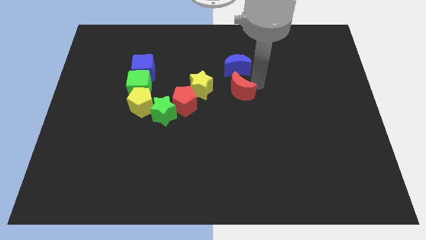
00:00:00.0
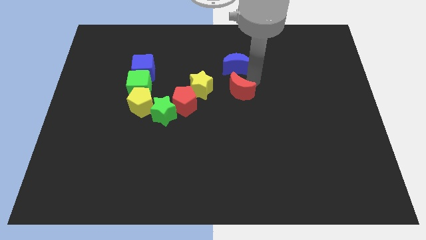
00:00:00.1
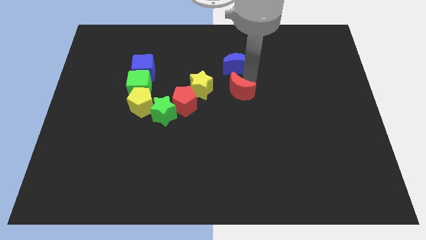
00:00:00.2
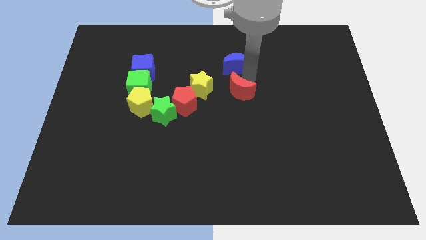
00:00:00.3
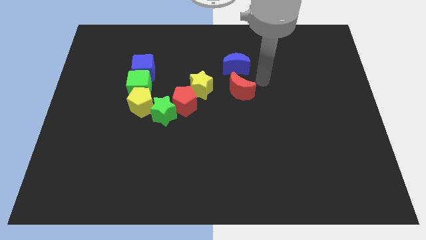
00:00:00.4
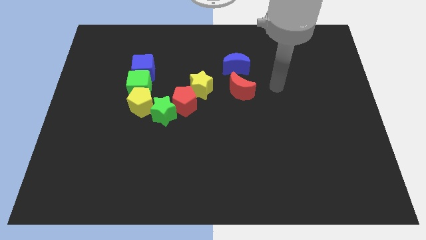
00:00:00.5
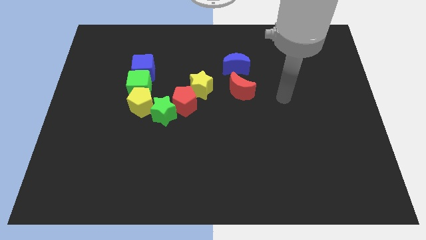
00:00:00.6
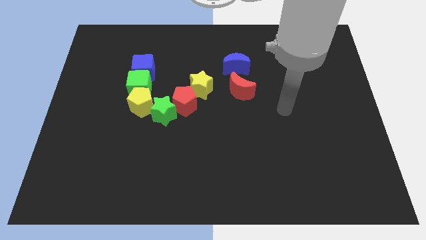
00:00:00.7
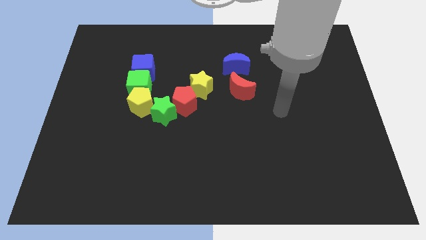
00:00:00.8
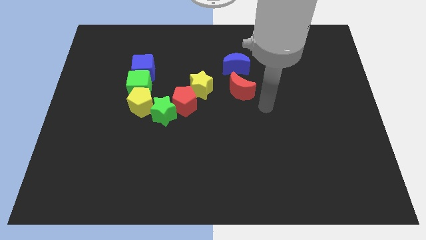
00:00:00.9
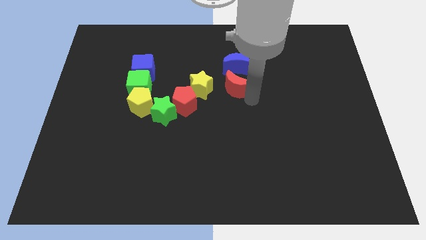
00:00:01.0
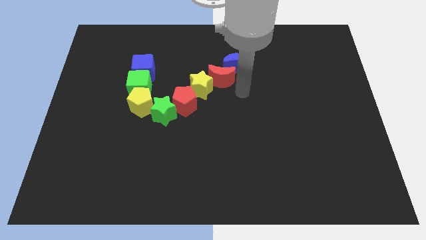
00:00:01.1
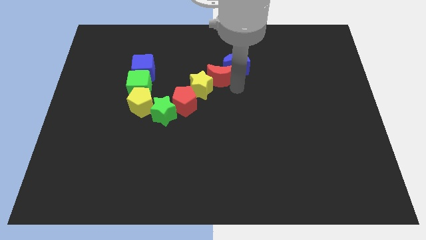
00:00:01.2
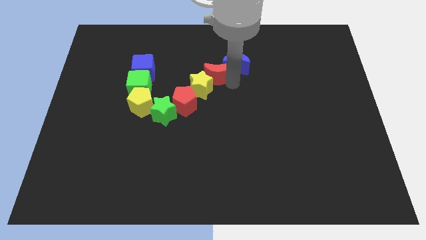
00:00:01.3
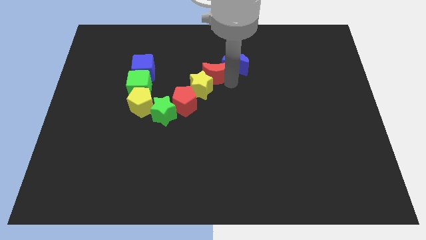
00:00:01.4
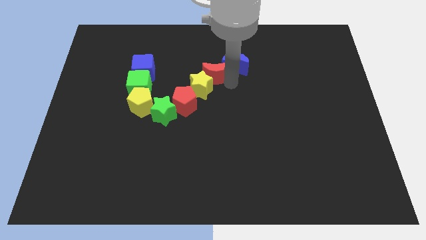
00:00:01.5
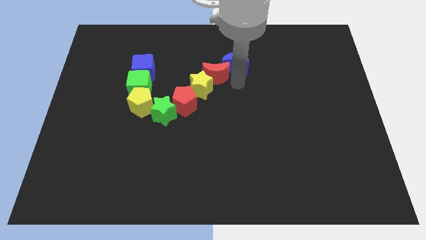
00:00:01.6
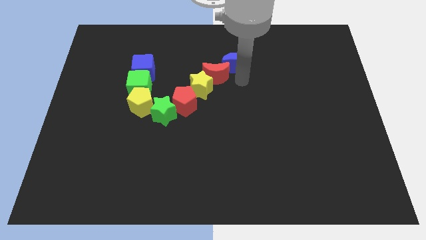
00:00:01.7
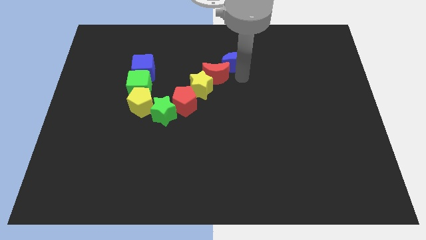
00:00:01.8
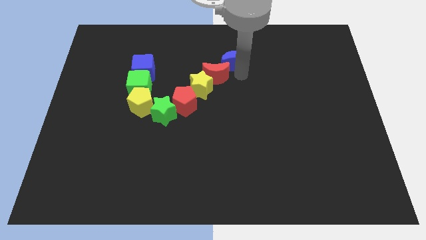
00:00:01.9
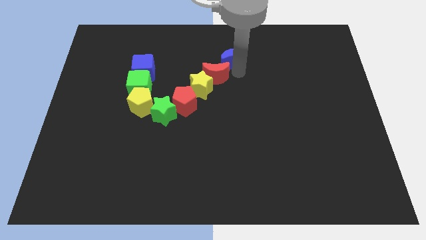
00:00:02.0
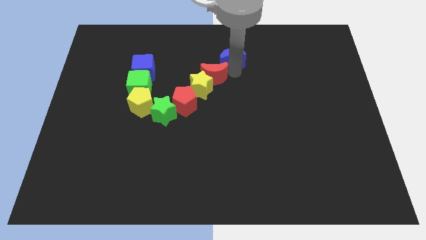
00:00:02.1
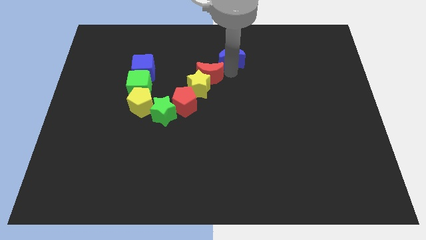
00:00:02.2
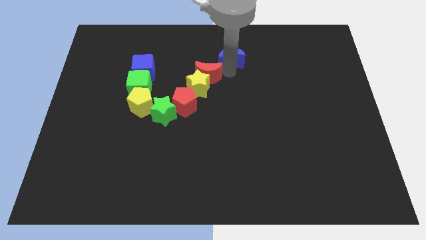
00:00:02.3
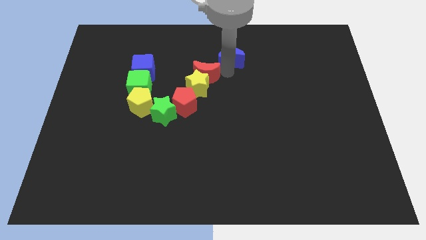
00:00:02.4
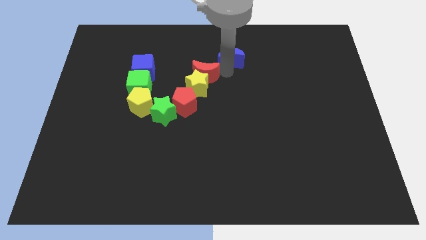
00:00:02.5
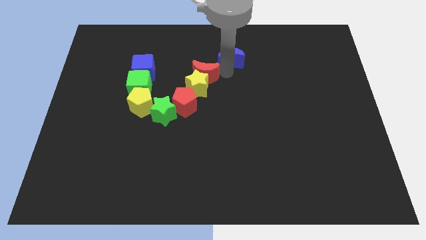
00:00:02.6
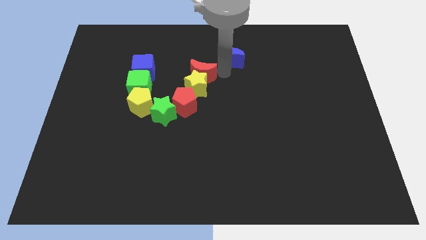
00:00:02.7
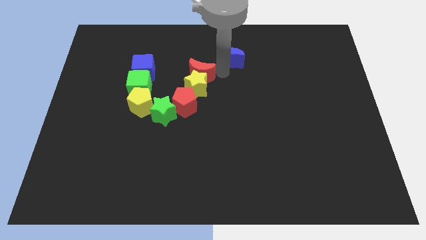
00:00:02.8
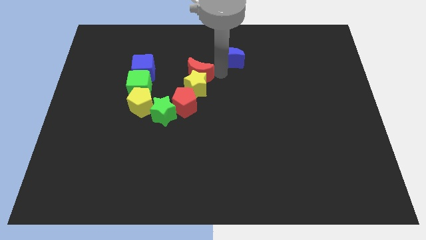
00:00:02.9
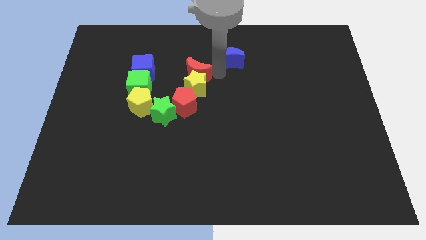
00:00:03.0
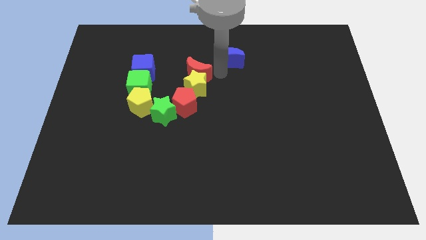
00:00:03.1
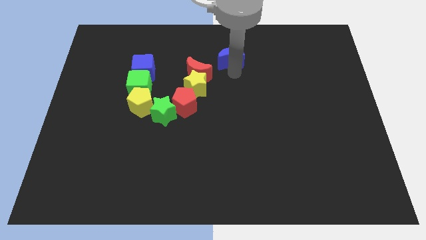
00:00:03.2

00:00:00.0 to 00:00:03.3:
move the red crescent into the top side of the yellow star

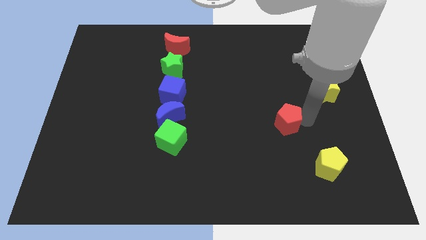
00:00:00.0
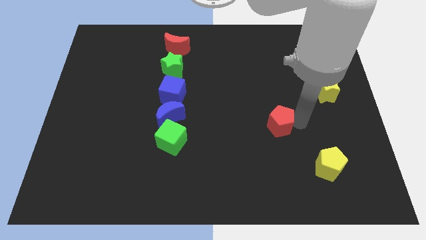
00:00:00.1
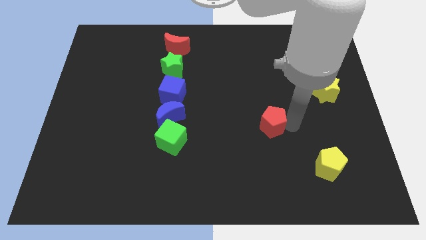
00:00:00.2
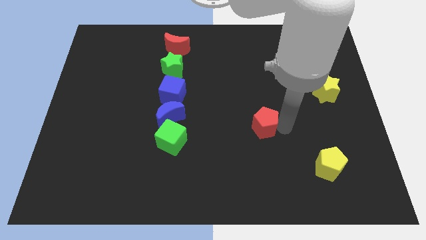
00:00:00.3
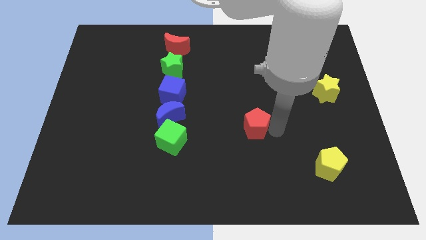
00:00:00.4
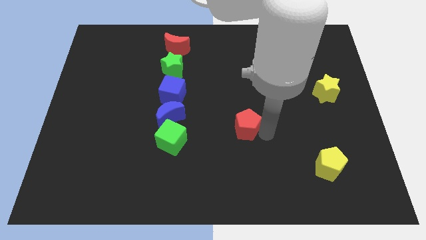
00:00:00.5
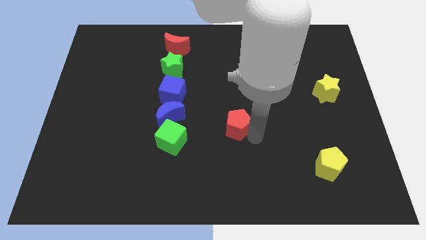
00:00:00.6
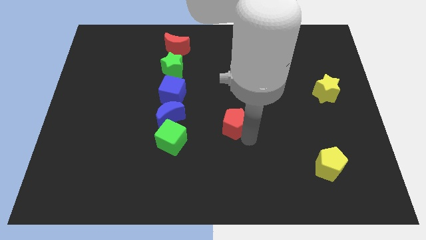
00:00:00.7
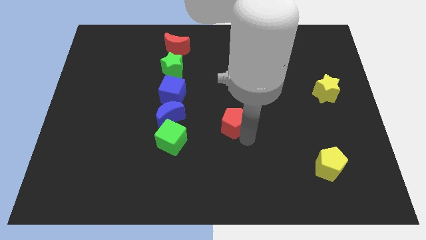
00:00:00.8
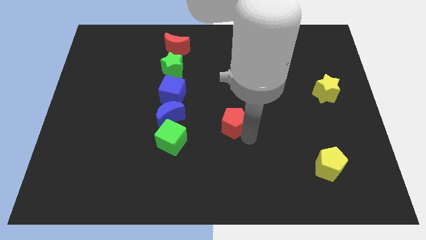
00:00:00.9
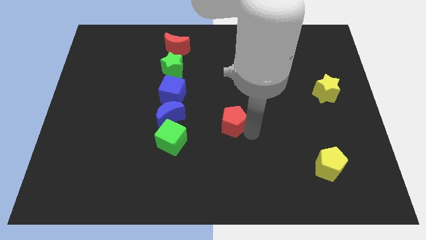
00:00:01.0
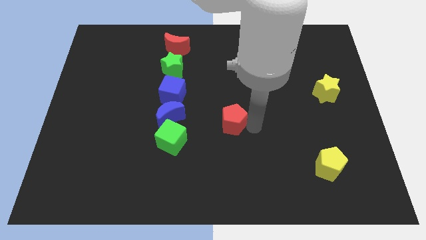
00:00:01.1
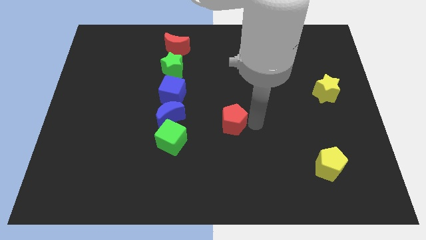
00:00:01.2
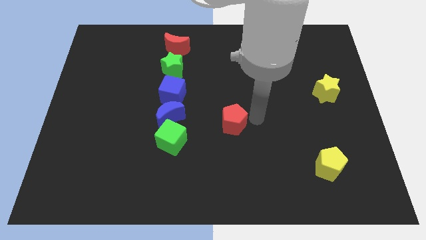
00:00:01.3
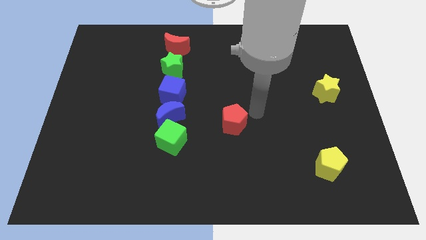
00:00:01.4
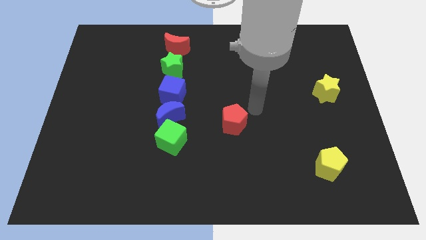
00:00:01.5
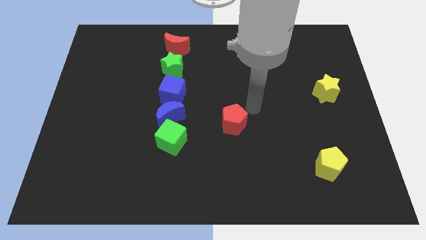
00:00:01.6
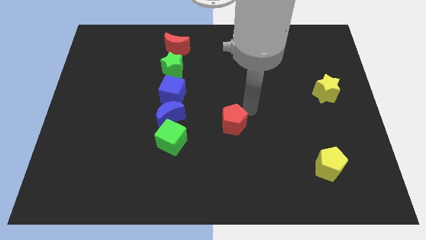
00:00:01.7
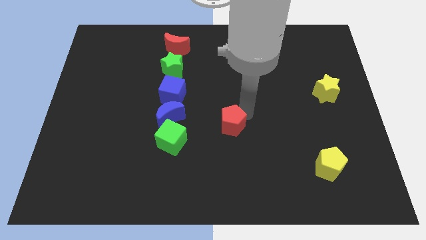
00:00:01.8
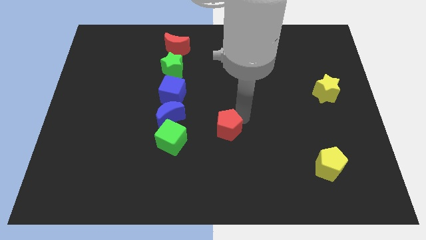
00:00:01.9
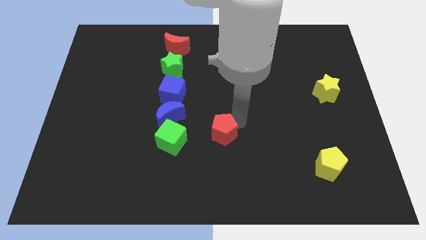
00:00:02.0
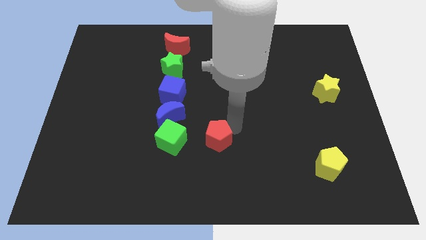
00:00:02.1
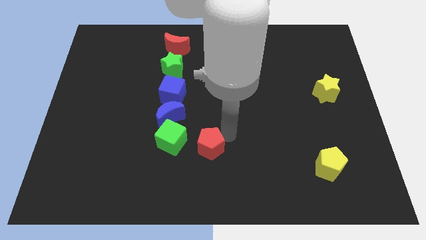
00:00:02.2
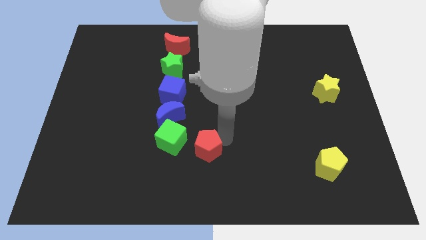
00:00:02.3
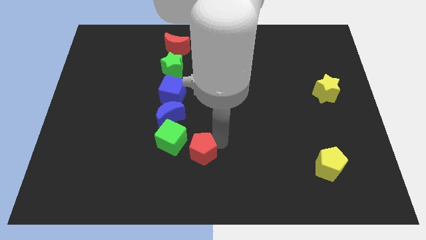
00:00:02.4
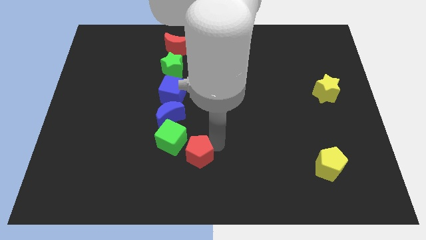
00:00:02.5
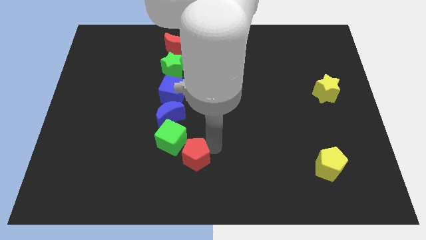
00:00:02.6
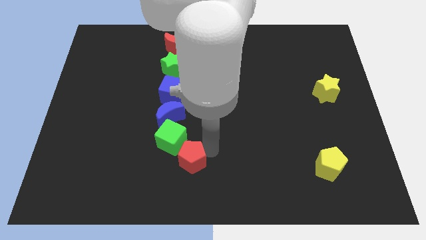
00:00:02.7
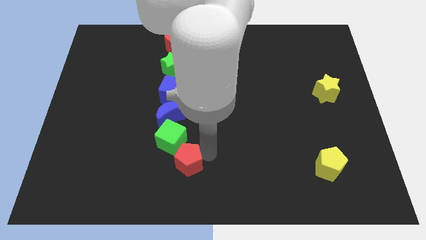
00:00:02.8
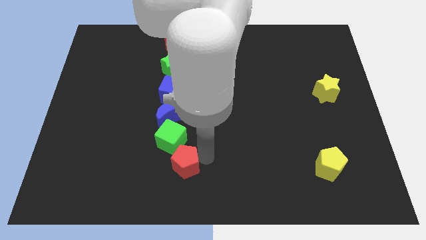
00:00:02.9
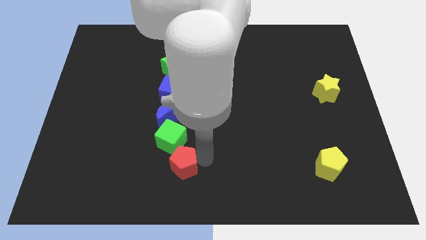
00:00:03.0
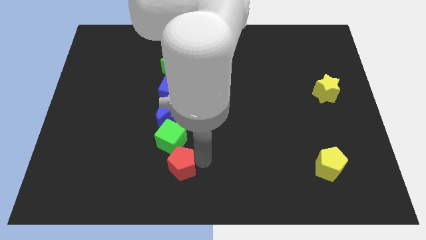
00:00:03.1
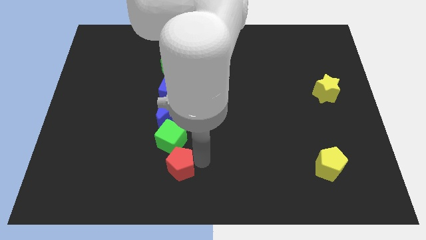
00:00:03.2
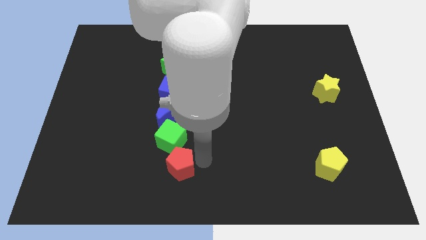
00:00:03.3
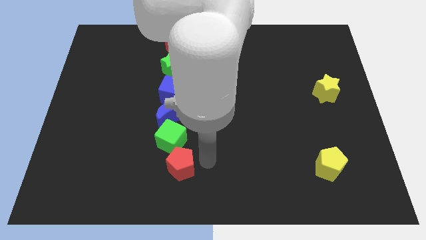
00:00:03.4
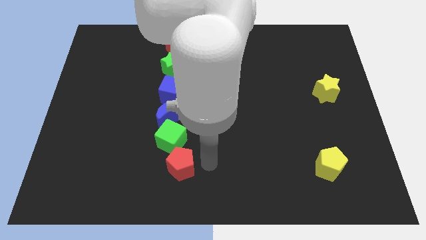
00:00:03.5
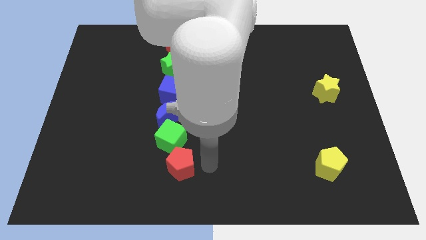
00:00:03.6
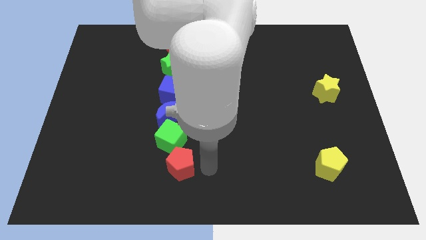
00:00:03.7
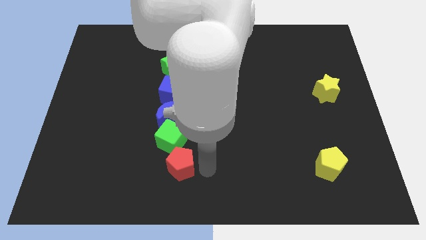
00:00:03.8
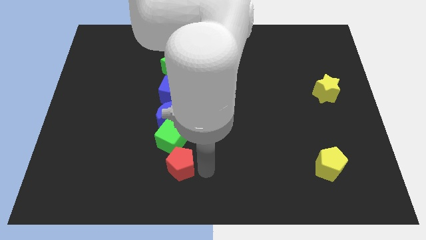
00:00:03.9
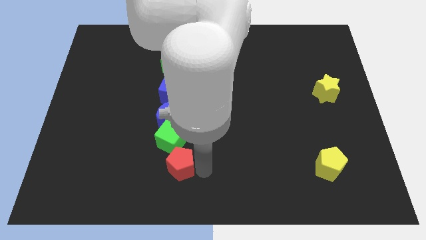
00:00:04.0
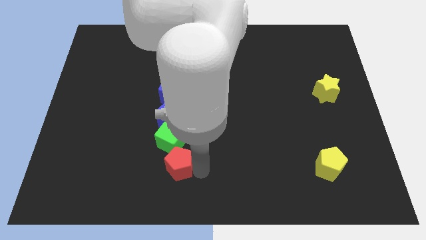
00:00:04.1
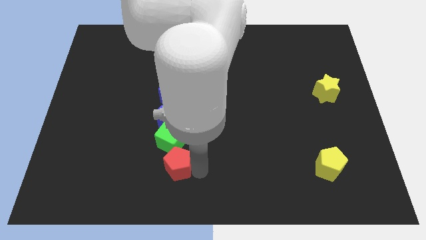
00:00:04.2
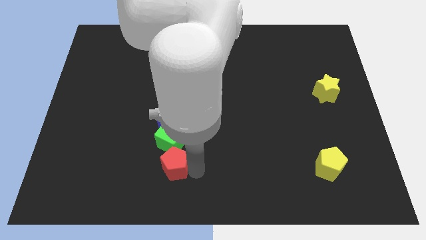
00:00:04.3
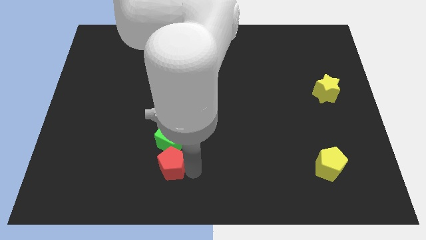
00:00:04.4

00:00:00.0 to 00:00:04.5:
place the red pentagon below the green cube

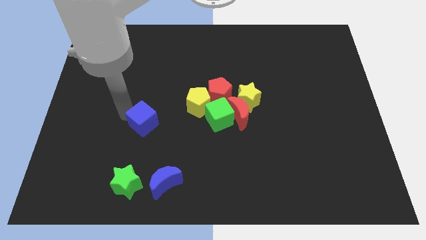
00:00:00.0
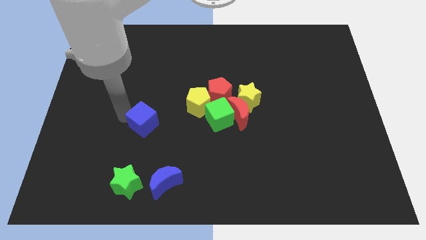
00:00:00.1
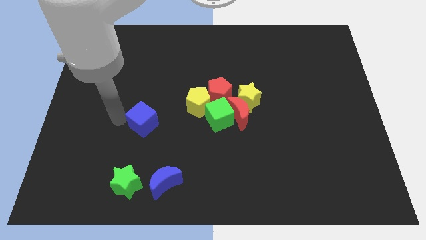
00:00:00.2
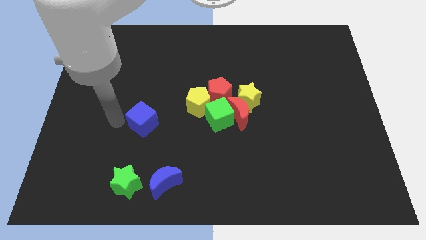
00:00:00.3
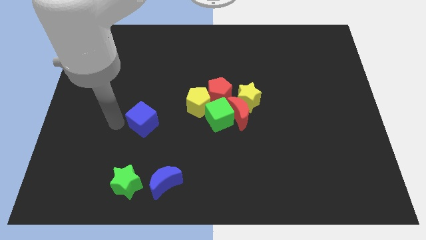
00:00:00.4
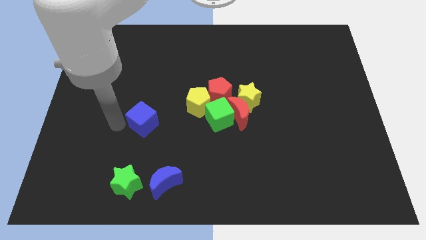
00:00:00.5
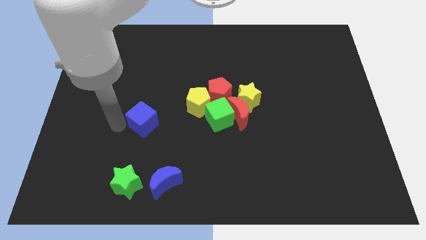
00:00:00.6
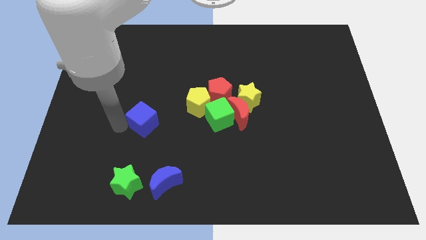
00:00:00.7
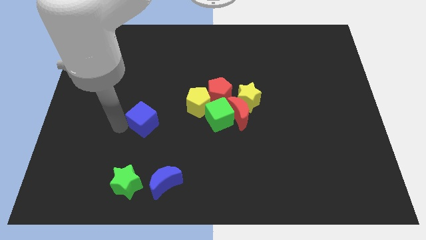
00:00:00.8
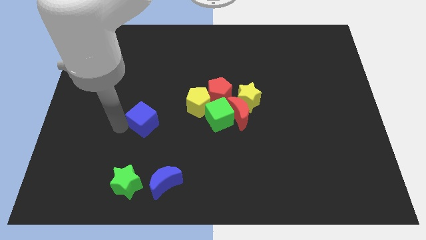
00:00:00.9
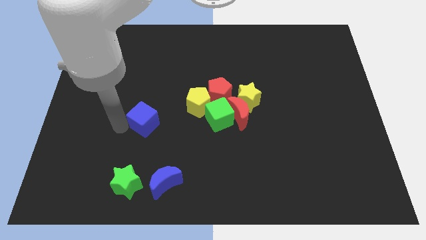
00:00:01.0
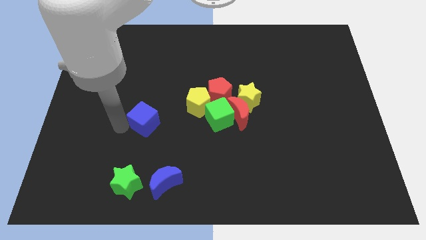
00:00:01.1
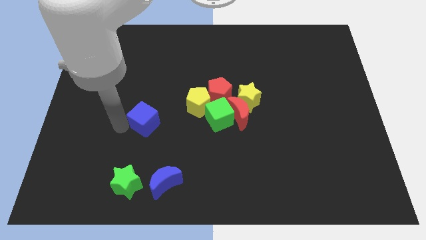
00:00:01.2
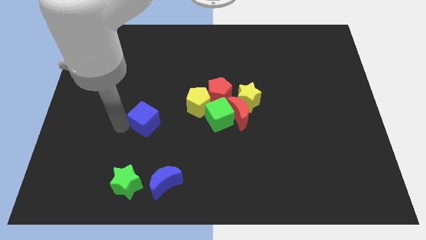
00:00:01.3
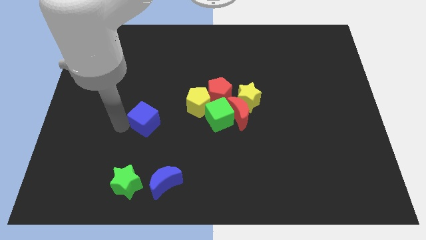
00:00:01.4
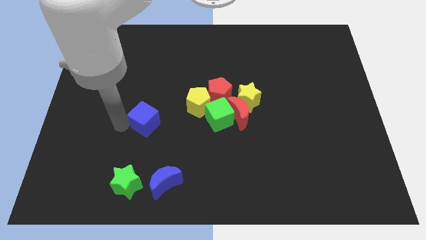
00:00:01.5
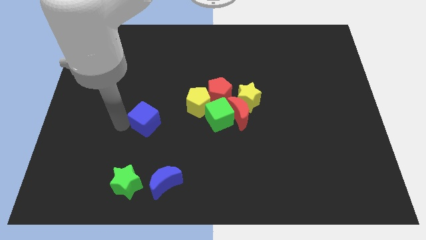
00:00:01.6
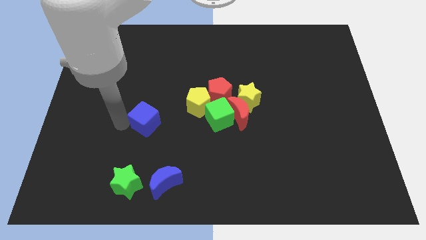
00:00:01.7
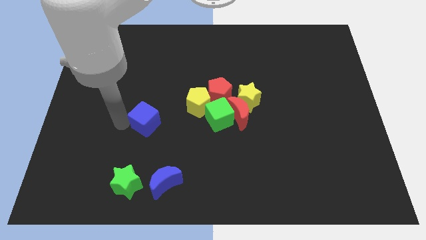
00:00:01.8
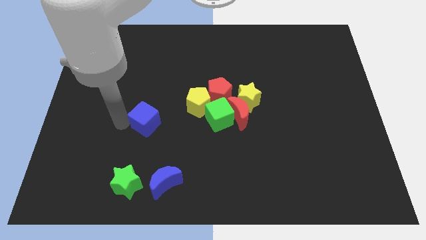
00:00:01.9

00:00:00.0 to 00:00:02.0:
place your arm to the left of the blue cube
